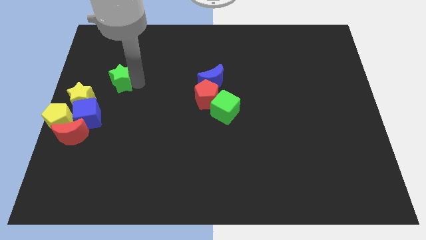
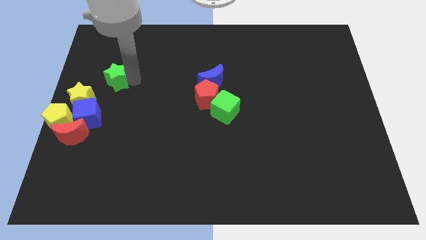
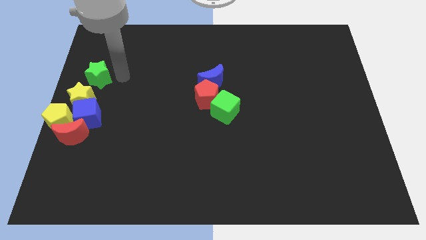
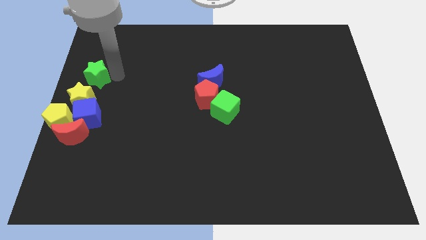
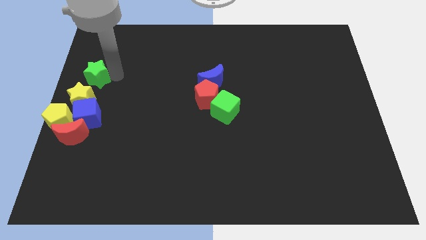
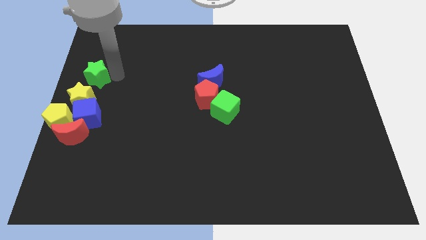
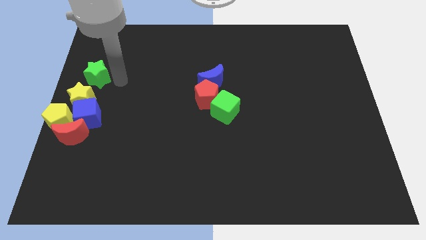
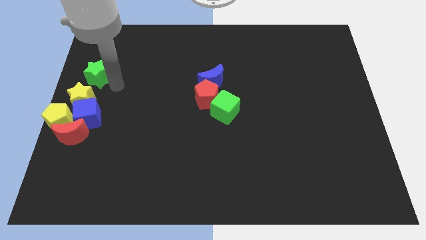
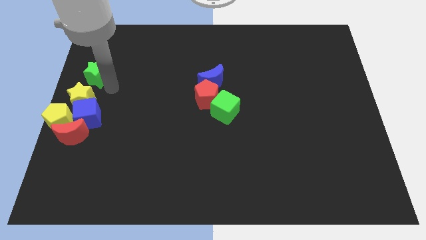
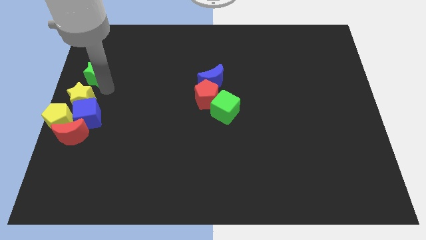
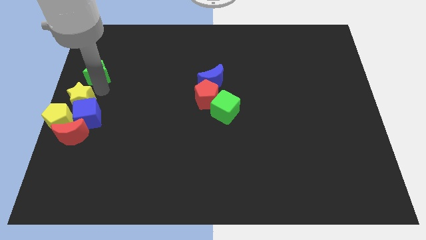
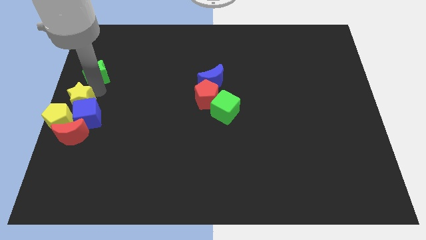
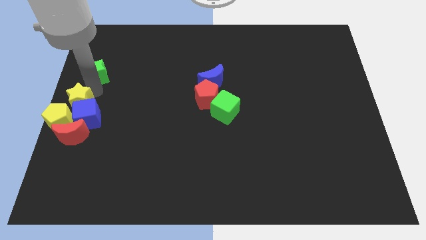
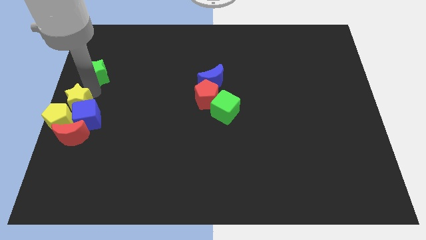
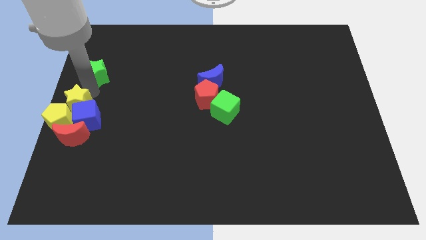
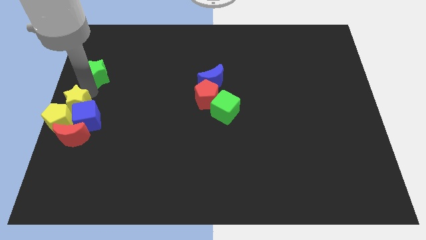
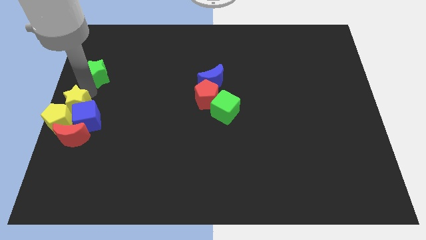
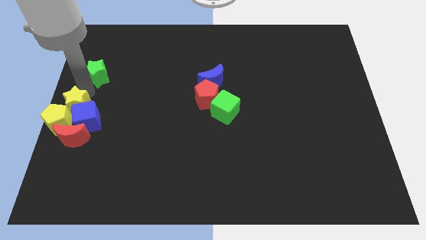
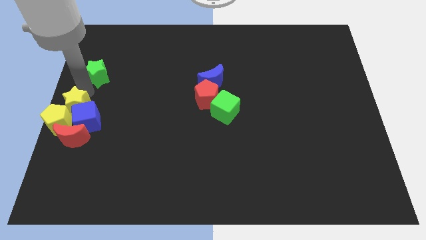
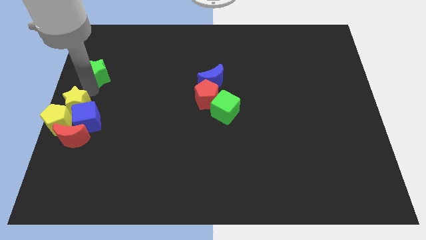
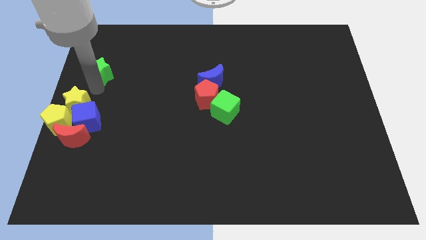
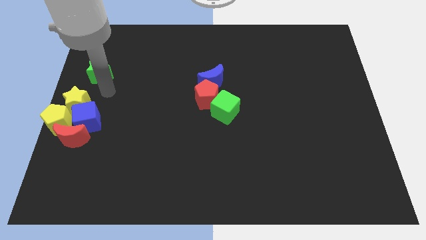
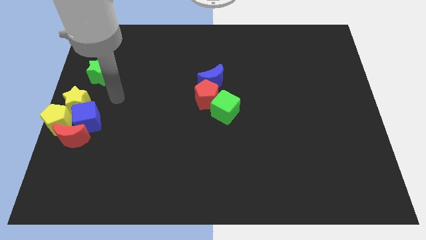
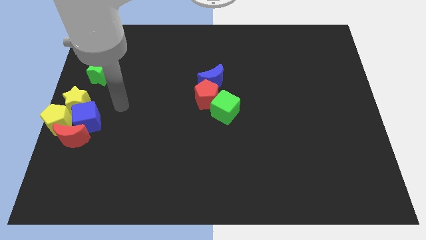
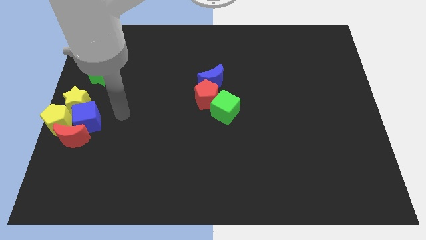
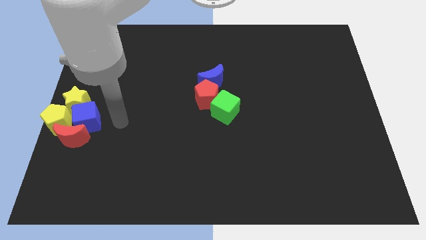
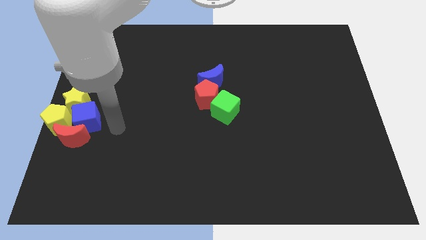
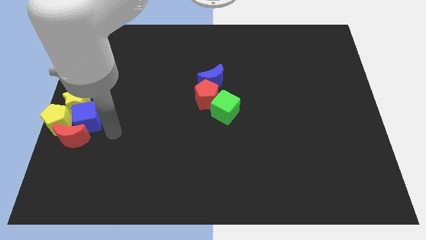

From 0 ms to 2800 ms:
move the green star above the yellow star

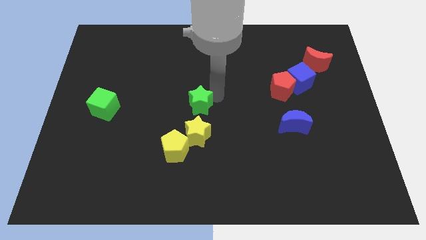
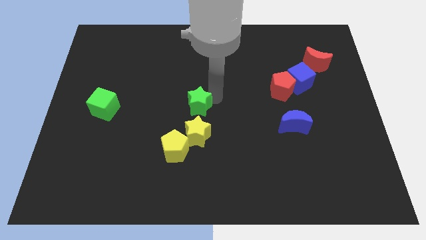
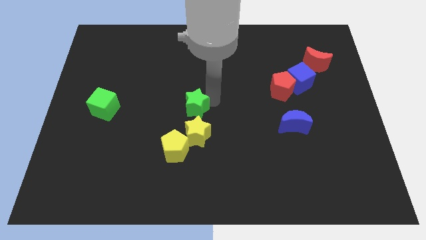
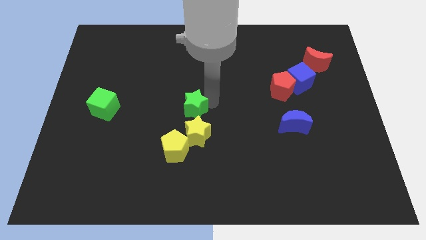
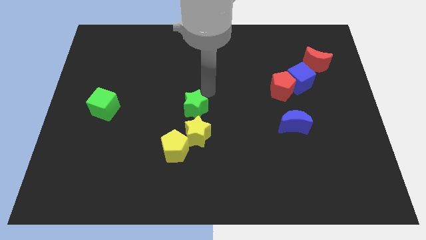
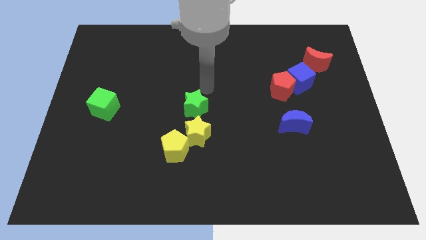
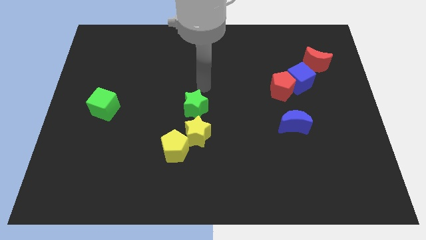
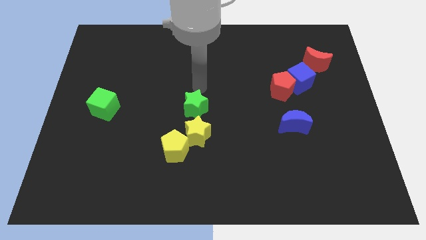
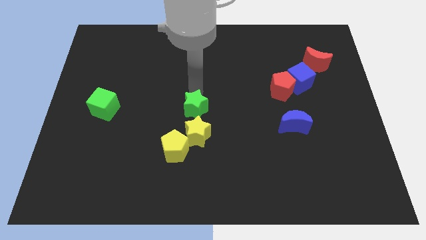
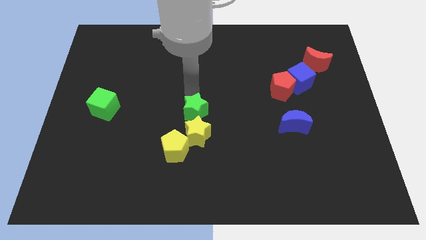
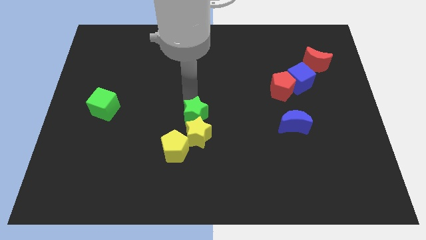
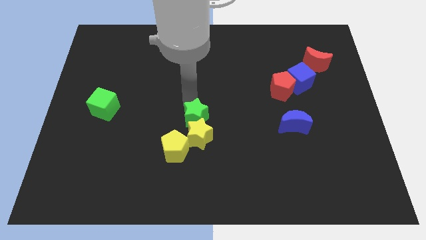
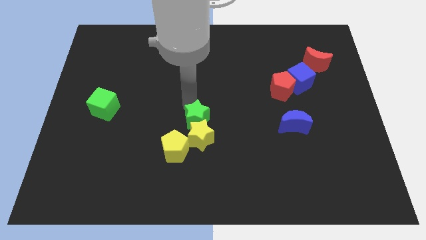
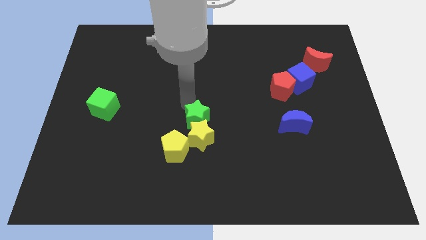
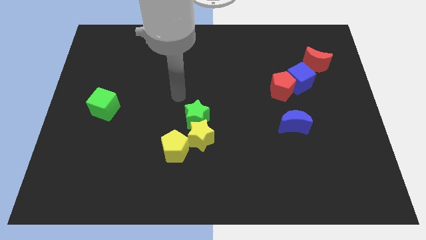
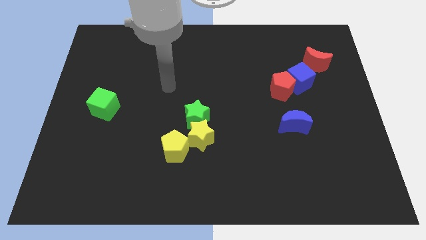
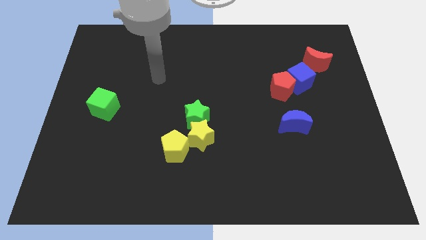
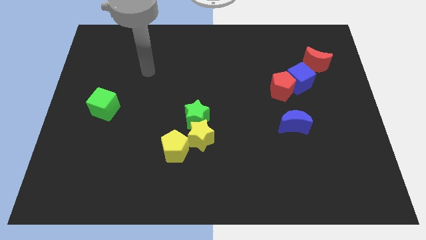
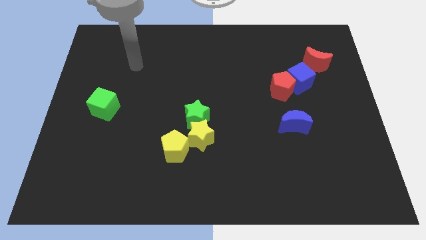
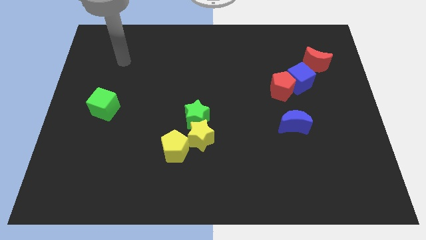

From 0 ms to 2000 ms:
place the green star above the yellow star

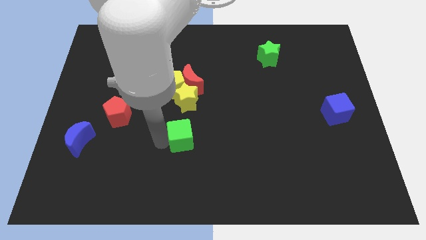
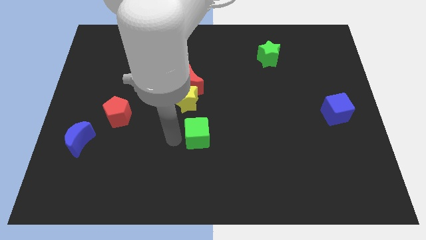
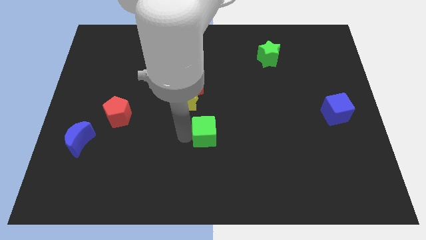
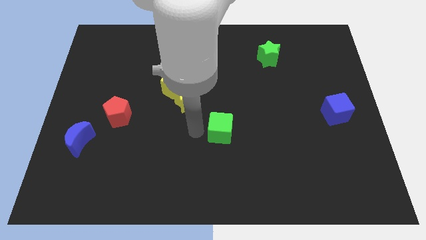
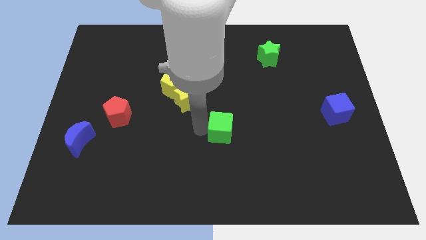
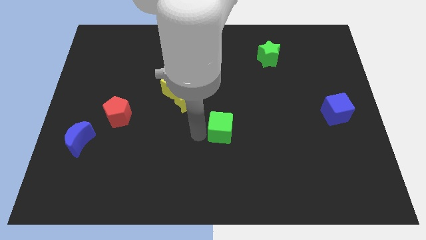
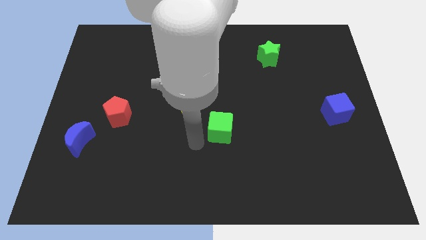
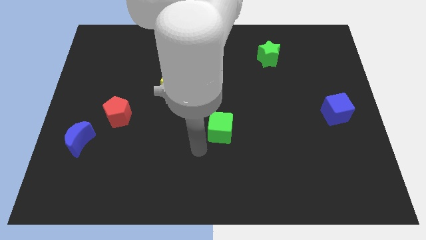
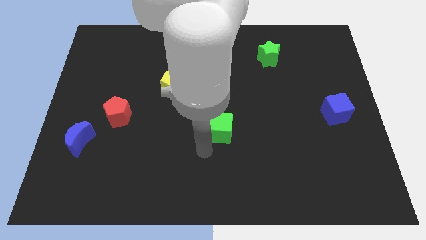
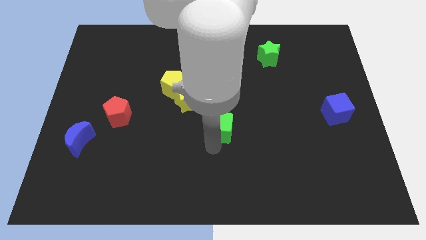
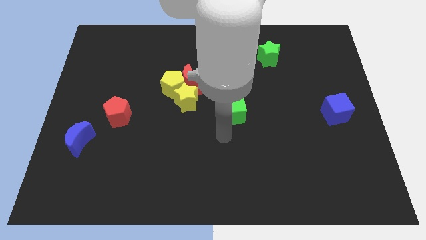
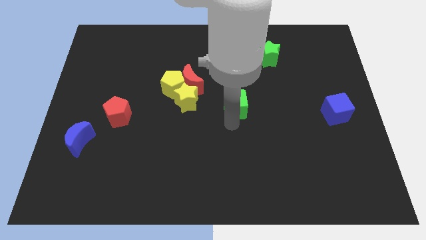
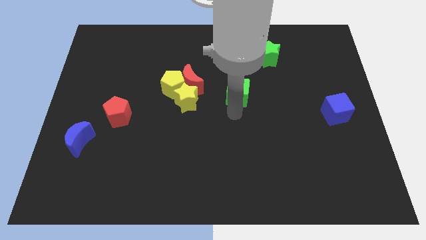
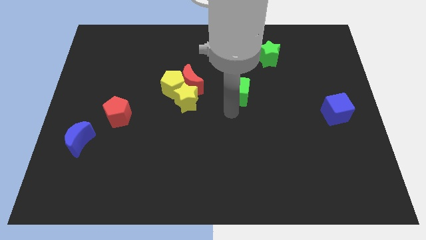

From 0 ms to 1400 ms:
move the green cube towards the green star

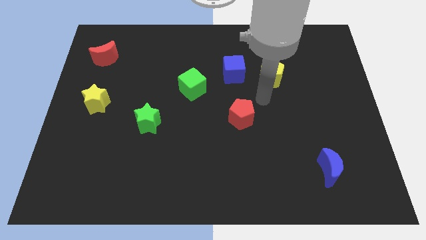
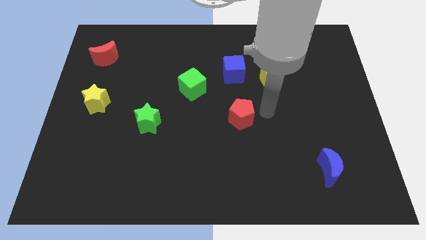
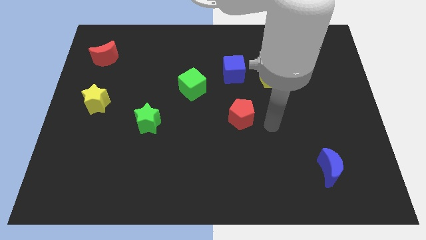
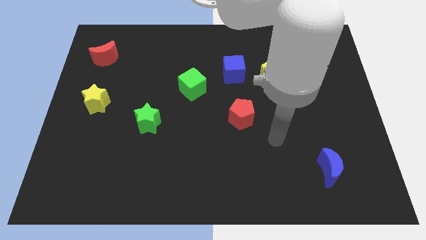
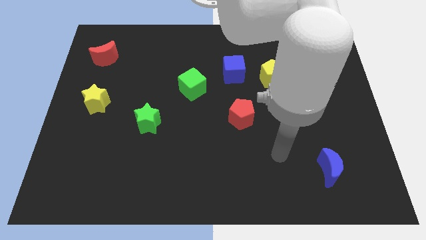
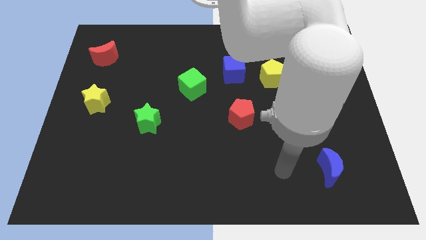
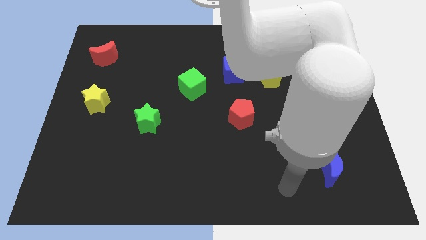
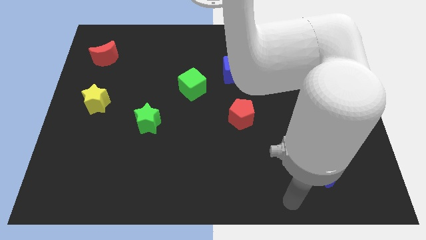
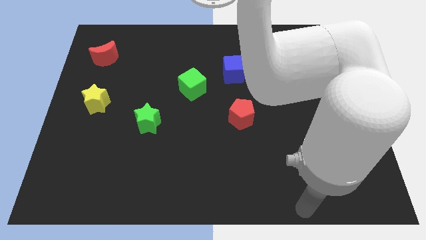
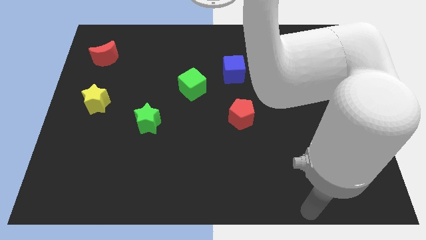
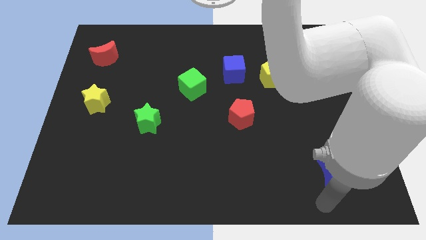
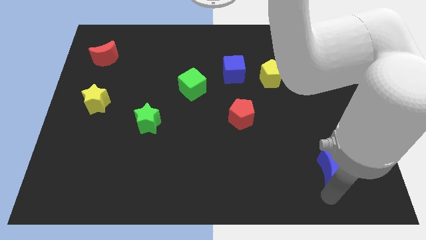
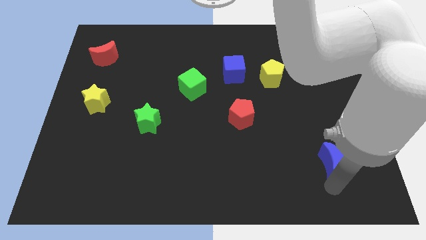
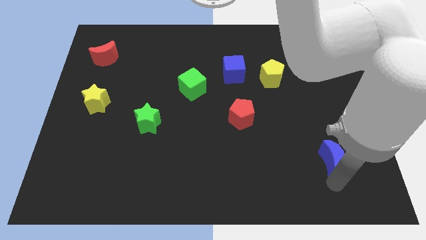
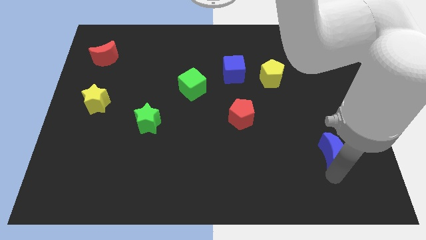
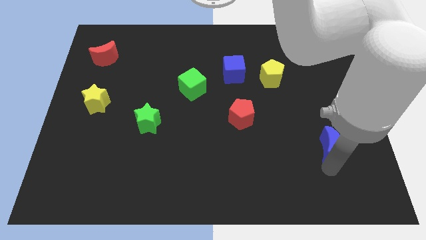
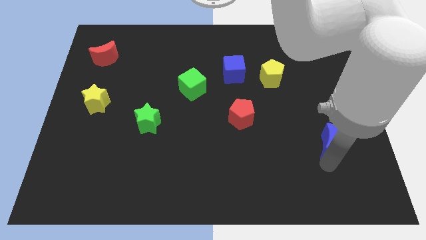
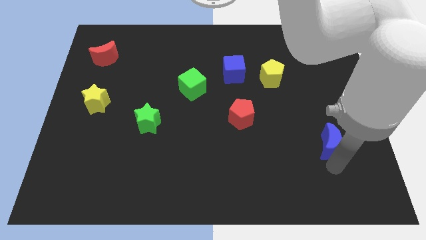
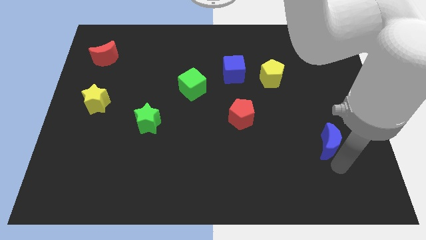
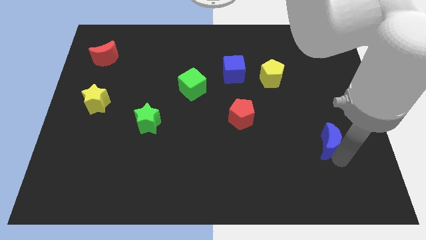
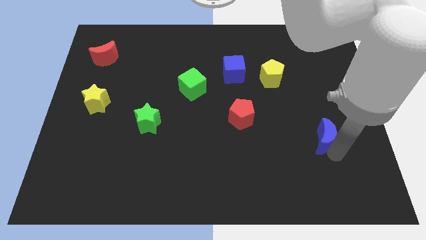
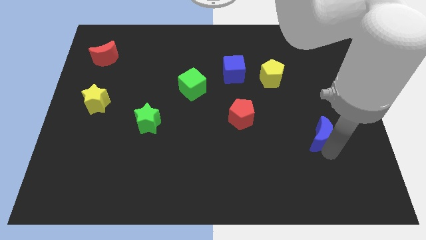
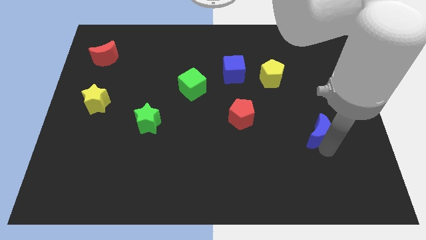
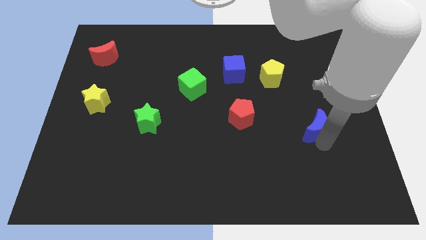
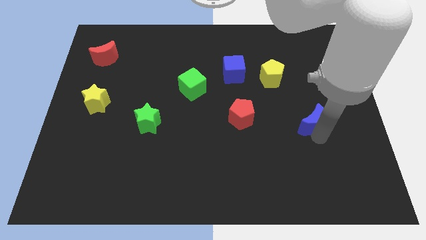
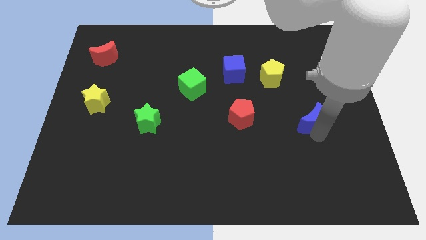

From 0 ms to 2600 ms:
push the blue moon upward

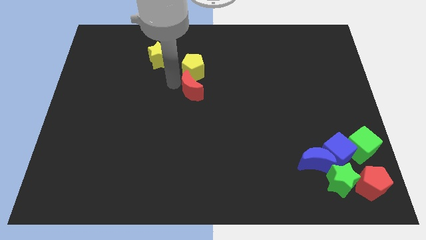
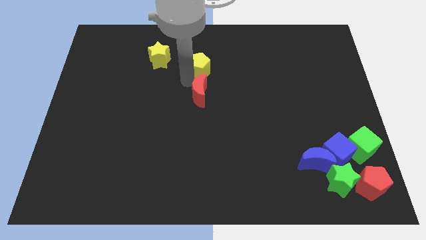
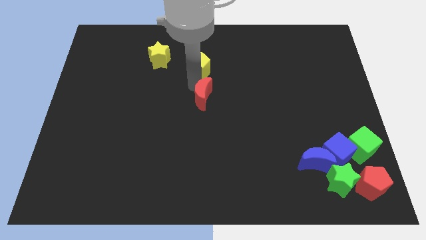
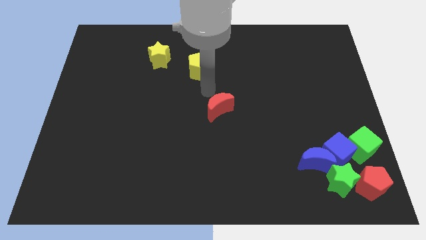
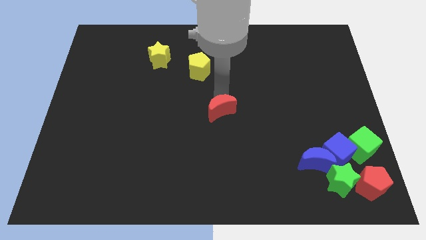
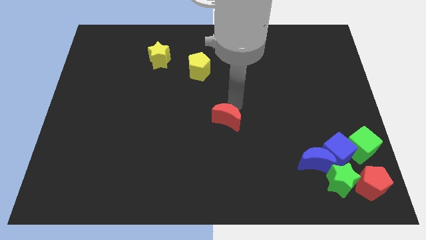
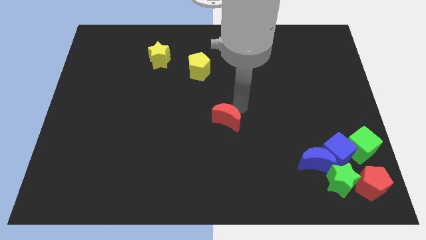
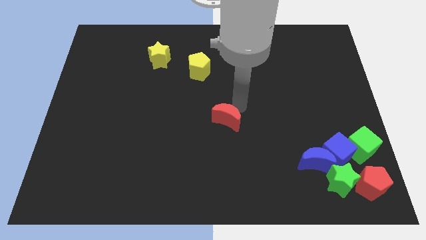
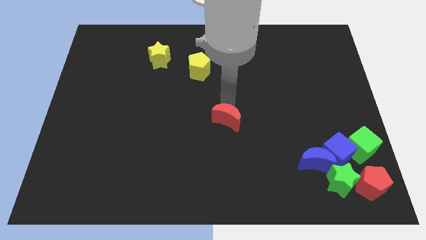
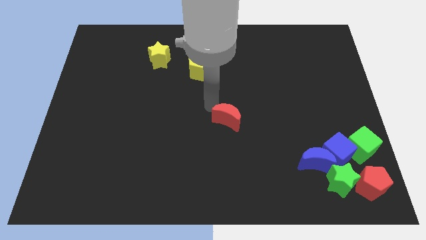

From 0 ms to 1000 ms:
move the red crescent to the center of the board
